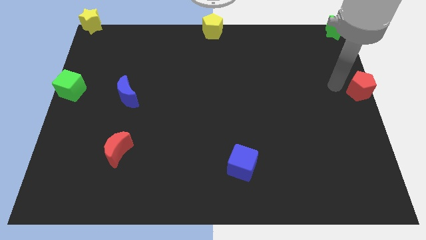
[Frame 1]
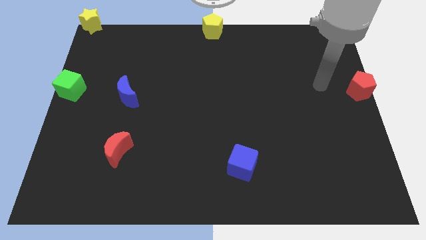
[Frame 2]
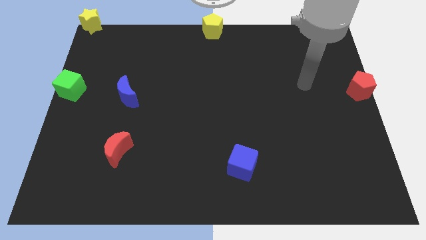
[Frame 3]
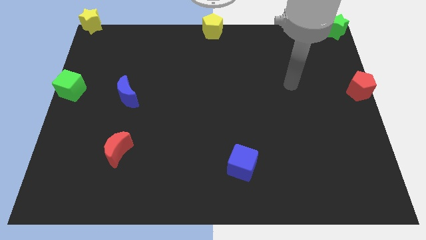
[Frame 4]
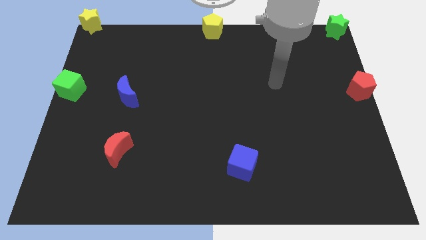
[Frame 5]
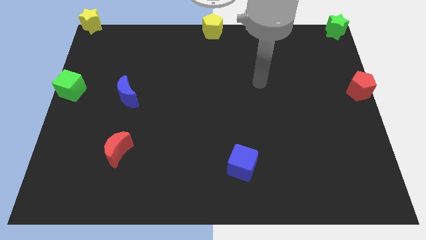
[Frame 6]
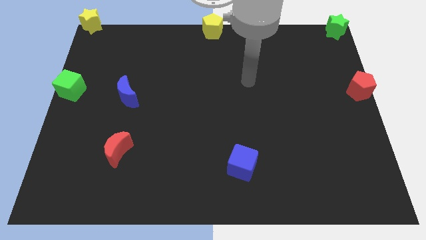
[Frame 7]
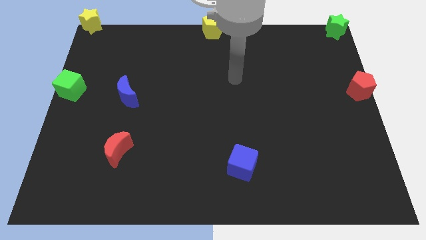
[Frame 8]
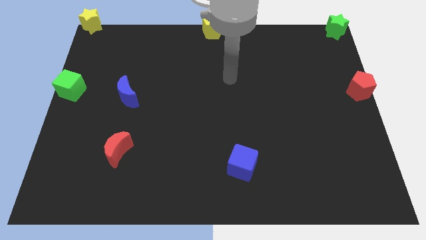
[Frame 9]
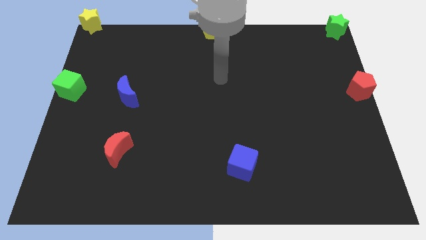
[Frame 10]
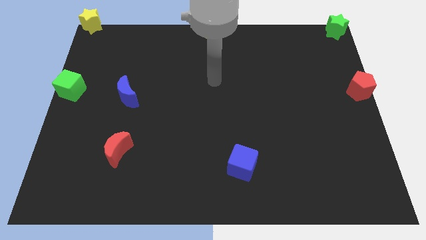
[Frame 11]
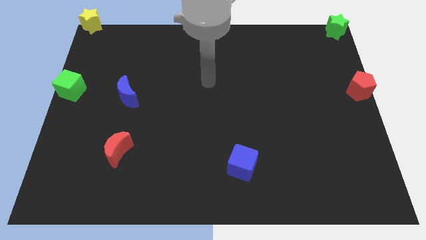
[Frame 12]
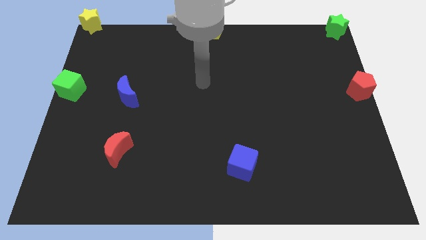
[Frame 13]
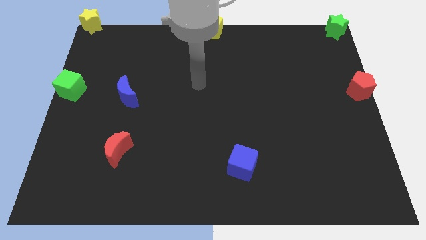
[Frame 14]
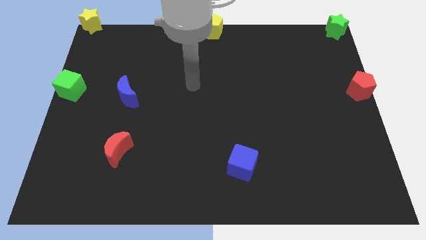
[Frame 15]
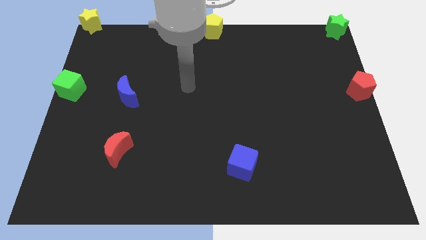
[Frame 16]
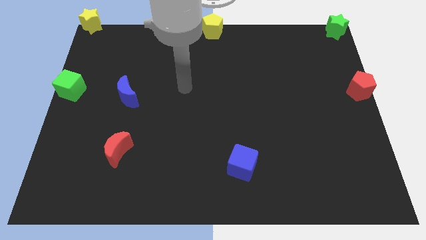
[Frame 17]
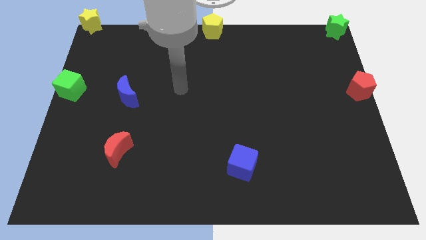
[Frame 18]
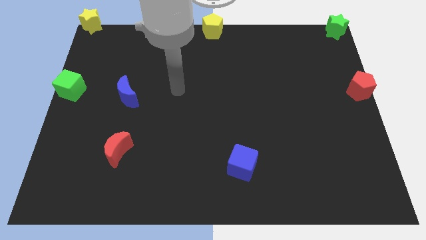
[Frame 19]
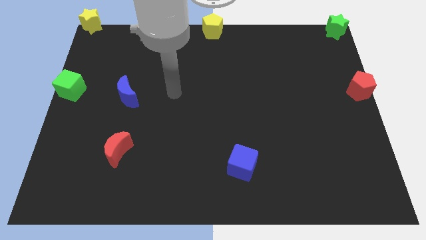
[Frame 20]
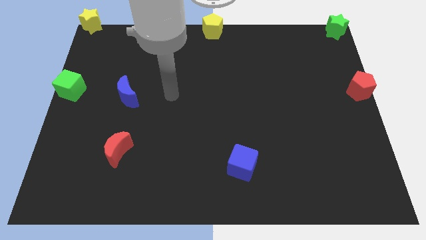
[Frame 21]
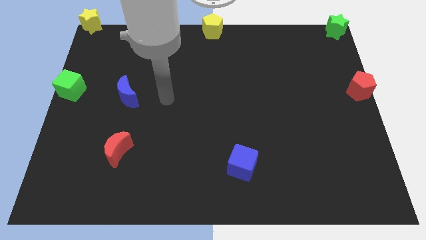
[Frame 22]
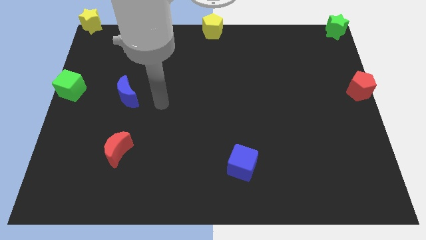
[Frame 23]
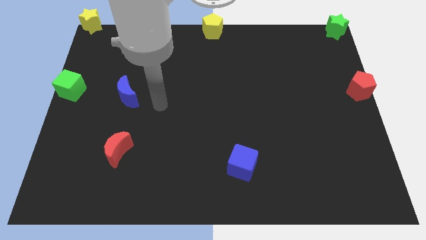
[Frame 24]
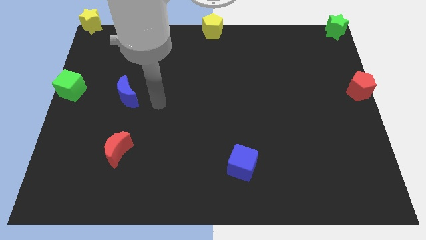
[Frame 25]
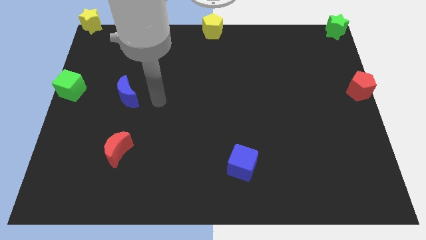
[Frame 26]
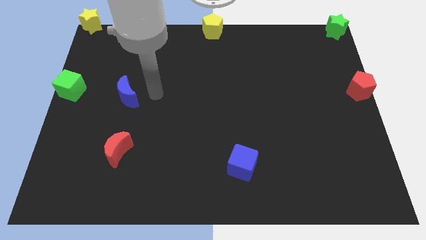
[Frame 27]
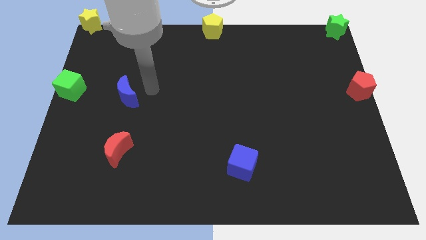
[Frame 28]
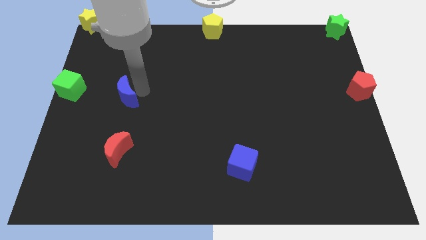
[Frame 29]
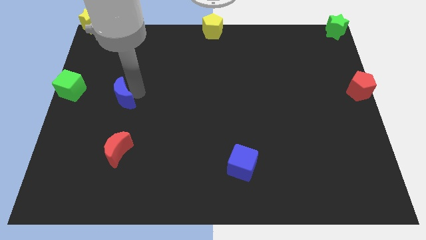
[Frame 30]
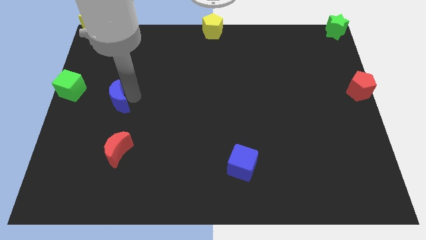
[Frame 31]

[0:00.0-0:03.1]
place the arm right to the blue moon

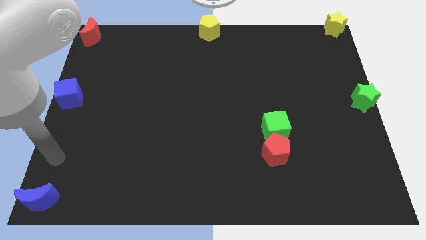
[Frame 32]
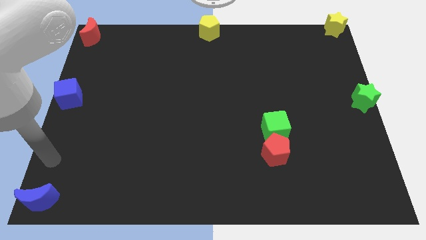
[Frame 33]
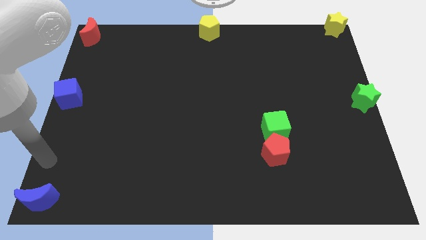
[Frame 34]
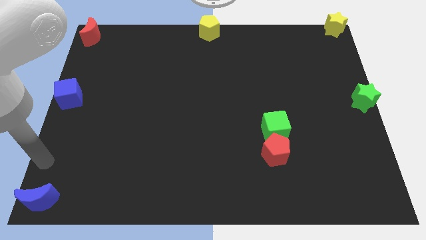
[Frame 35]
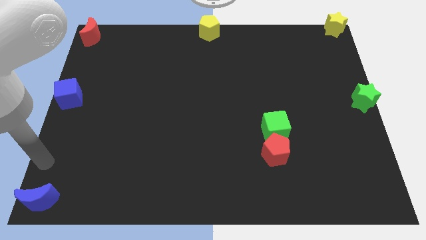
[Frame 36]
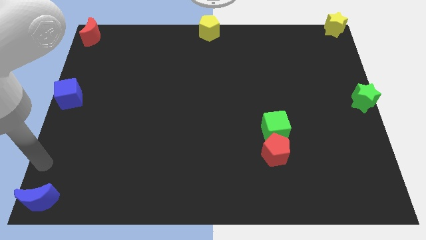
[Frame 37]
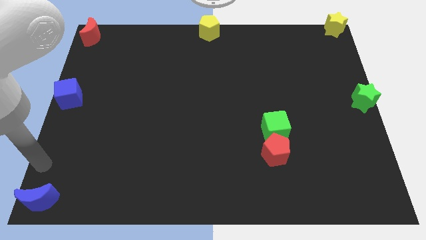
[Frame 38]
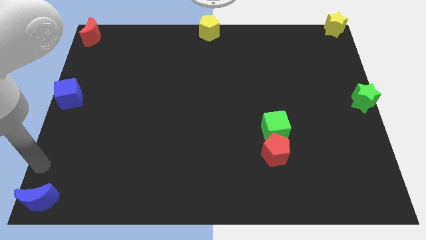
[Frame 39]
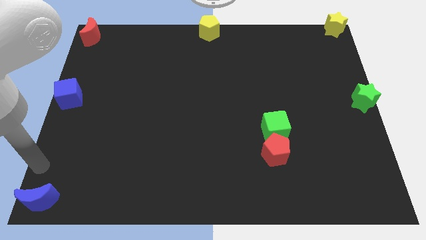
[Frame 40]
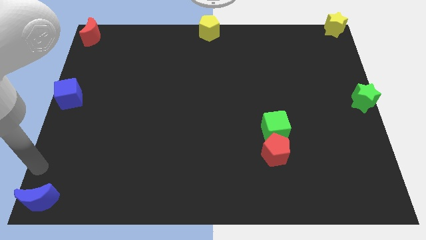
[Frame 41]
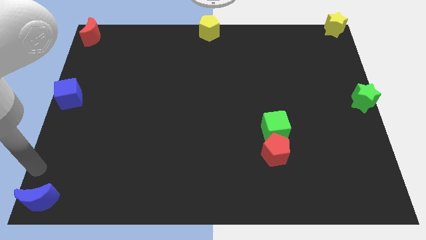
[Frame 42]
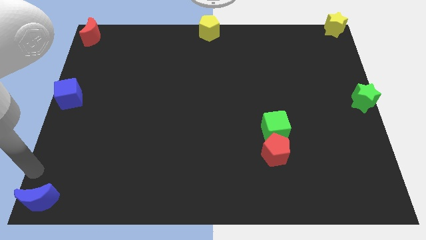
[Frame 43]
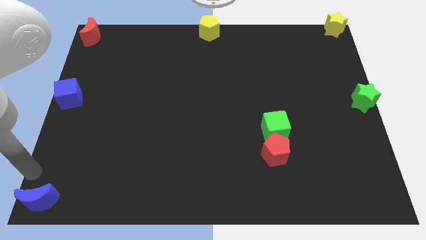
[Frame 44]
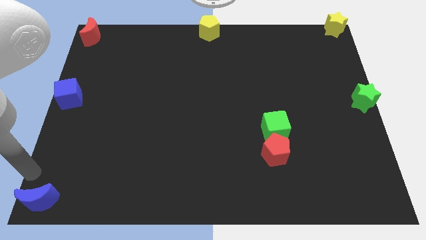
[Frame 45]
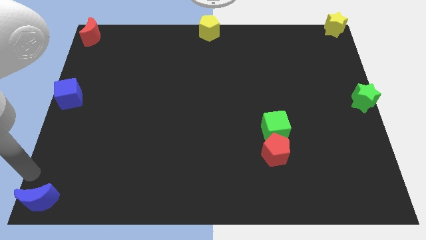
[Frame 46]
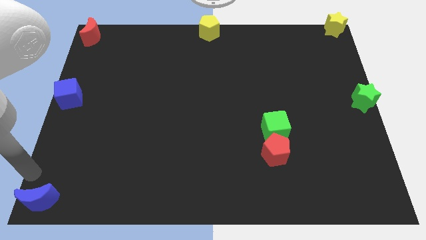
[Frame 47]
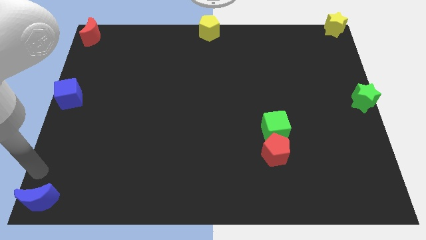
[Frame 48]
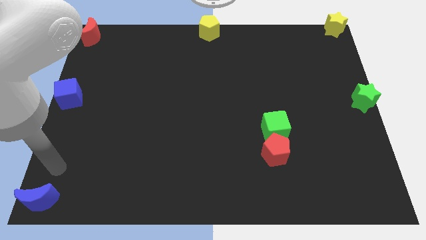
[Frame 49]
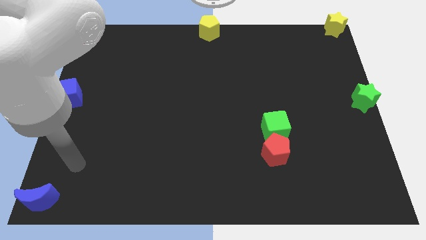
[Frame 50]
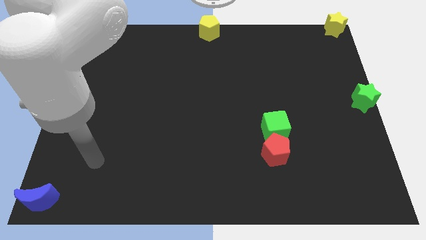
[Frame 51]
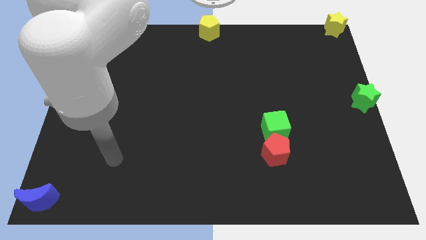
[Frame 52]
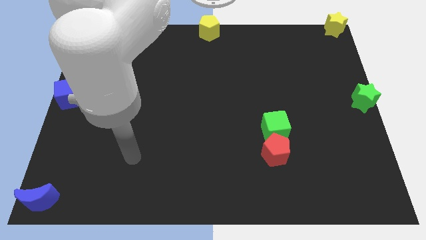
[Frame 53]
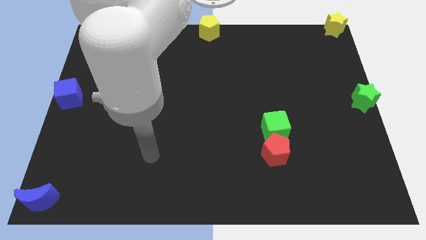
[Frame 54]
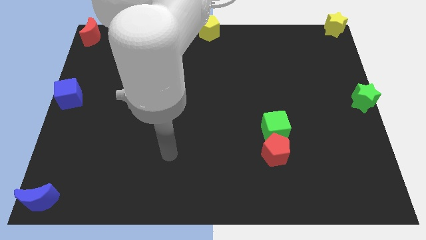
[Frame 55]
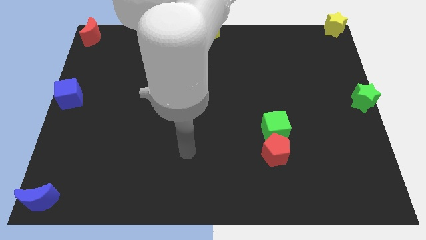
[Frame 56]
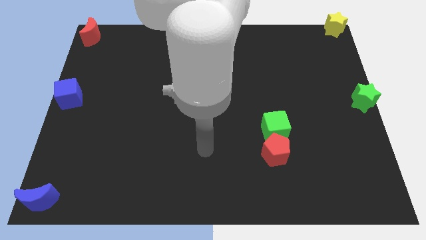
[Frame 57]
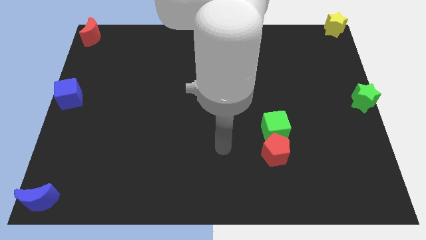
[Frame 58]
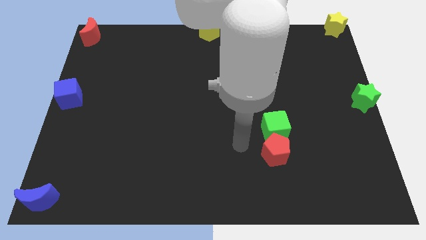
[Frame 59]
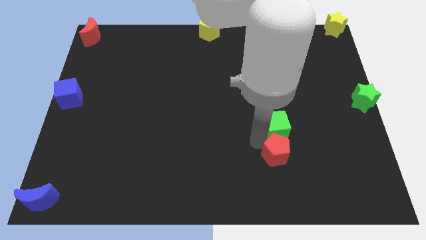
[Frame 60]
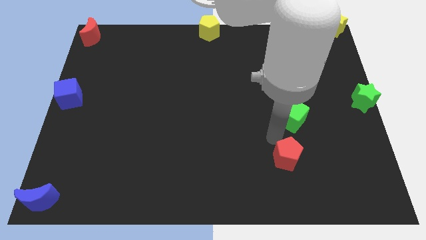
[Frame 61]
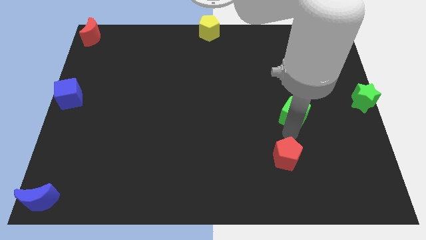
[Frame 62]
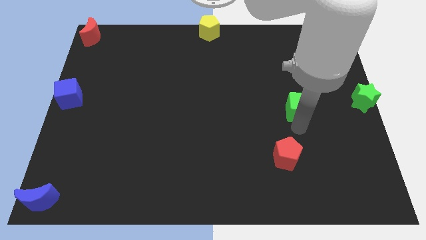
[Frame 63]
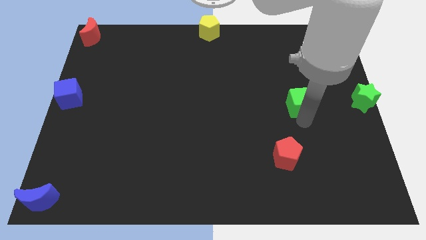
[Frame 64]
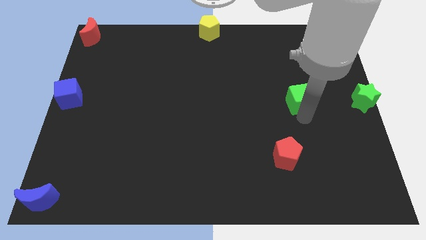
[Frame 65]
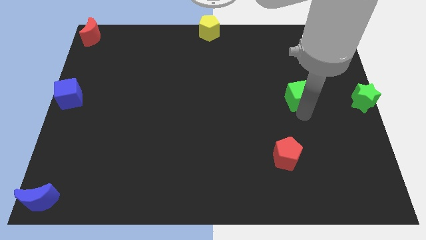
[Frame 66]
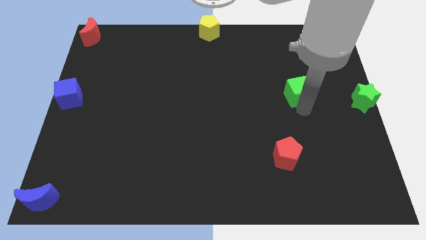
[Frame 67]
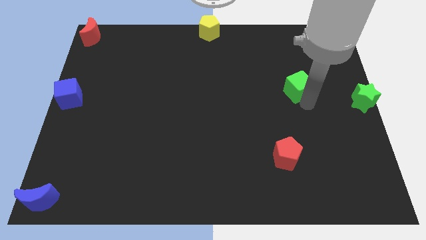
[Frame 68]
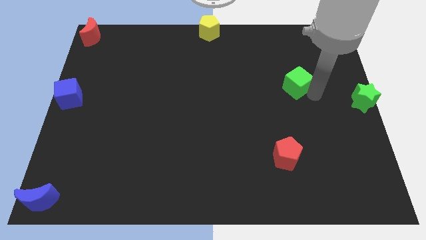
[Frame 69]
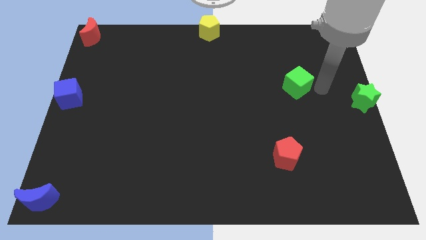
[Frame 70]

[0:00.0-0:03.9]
separate green cube and red pentagon

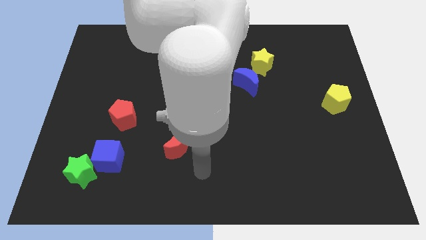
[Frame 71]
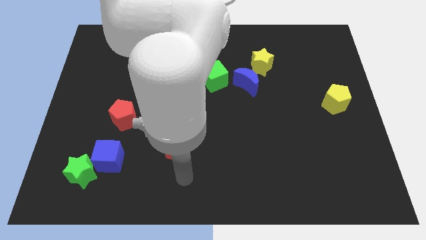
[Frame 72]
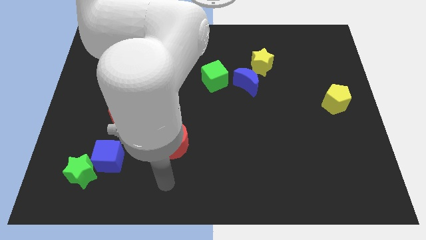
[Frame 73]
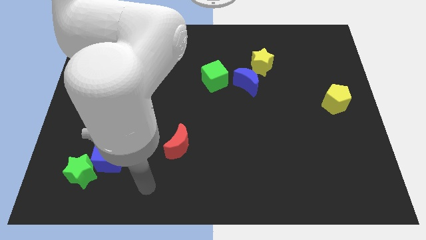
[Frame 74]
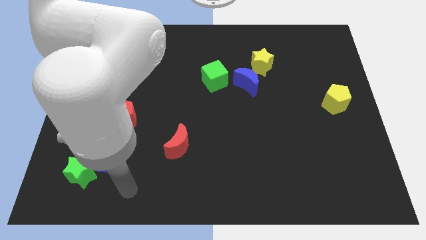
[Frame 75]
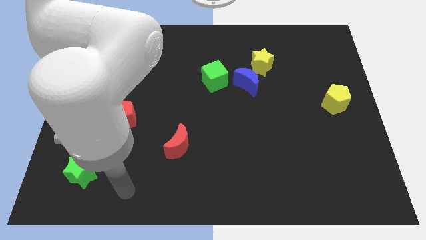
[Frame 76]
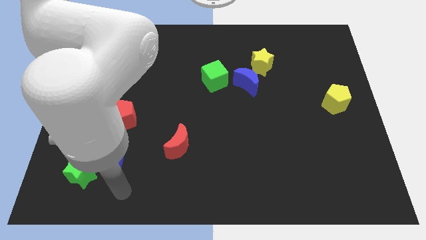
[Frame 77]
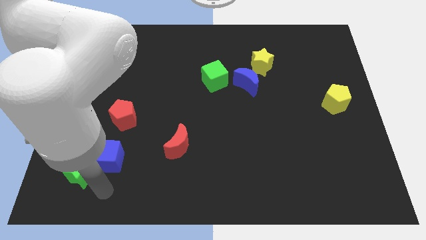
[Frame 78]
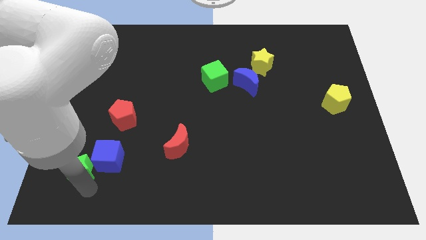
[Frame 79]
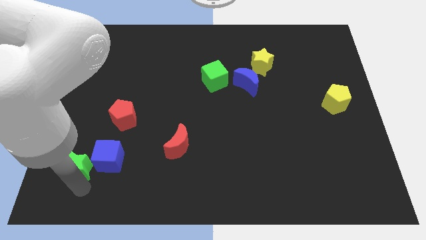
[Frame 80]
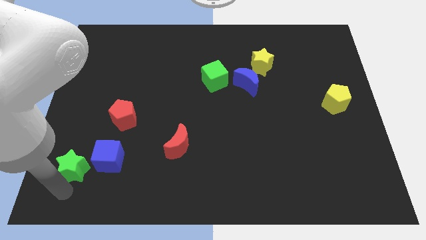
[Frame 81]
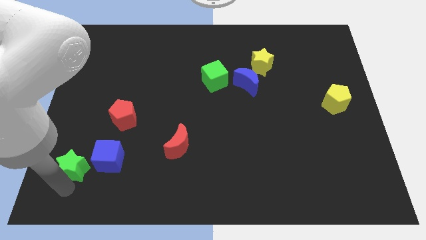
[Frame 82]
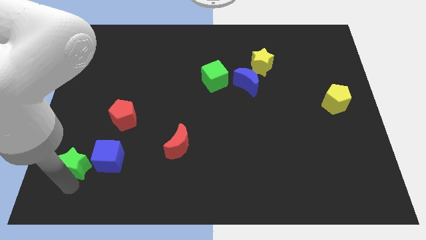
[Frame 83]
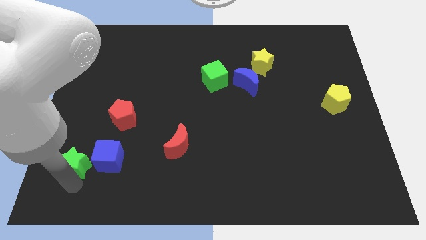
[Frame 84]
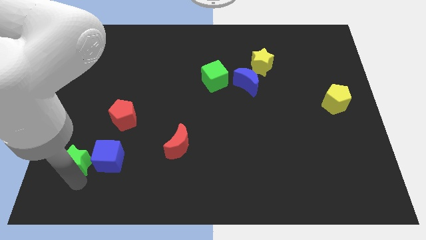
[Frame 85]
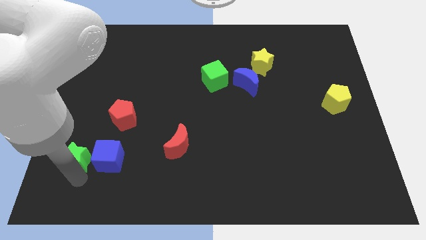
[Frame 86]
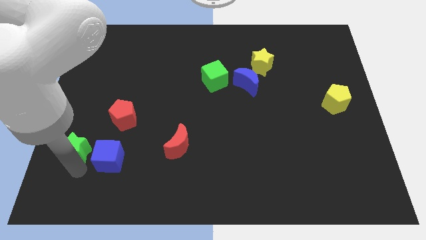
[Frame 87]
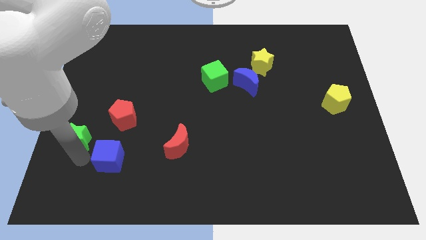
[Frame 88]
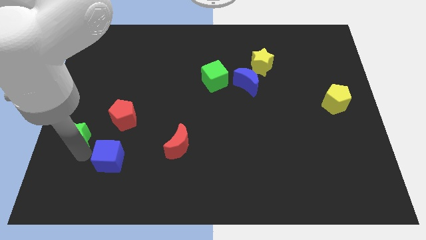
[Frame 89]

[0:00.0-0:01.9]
move your arm towards the green star
